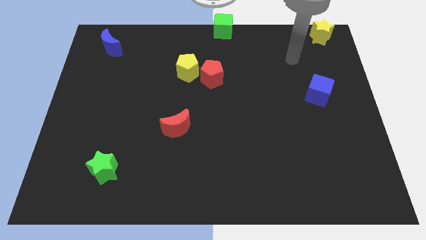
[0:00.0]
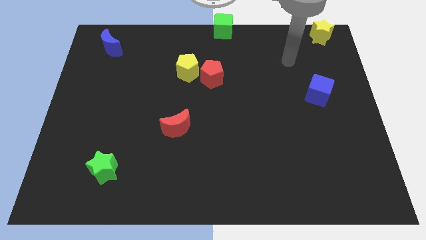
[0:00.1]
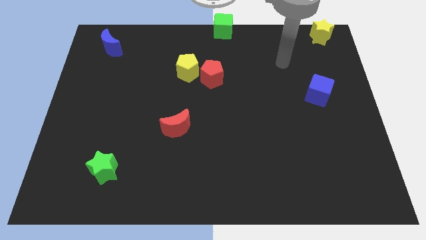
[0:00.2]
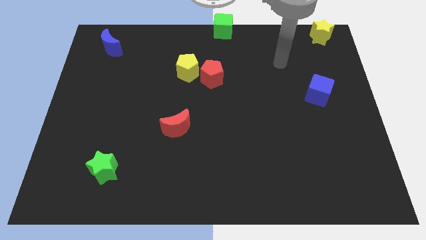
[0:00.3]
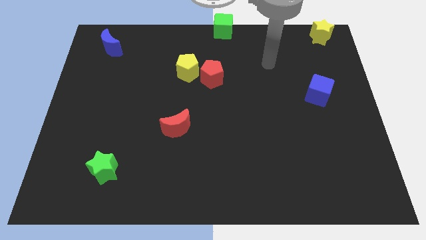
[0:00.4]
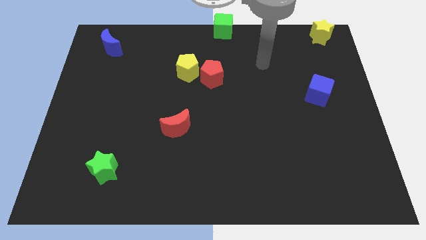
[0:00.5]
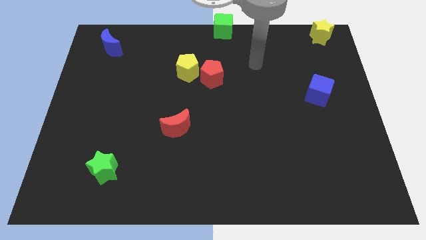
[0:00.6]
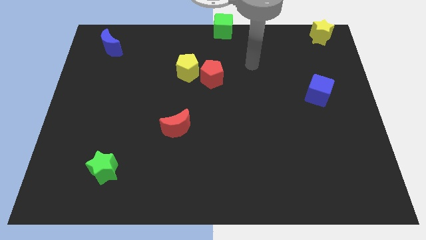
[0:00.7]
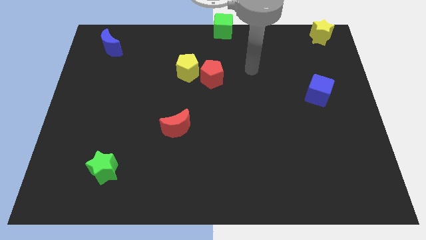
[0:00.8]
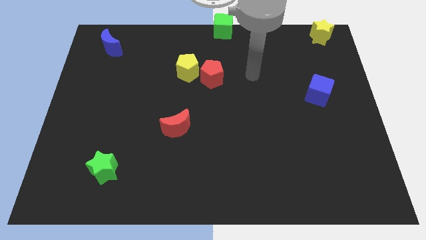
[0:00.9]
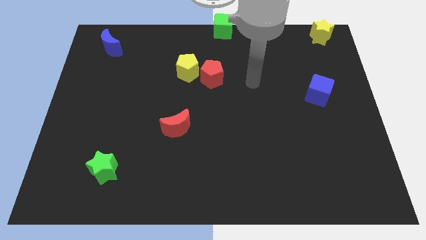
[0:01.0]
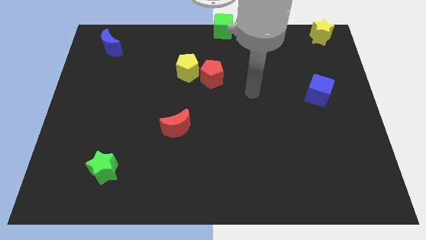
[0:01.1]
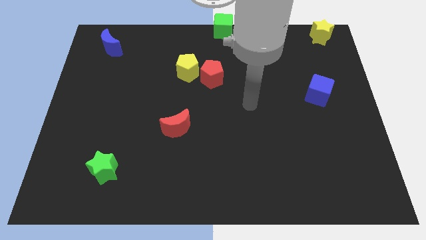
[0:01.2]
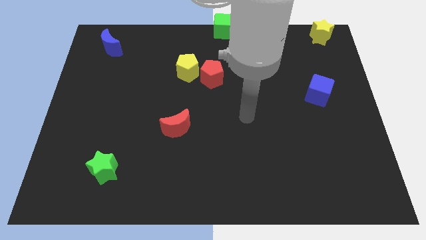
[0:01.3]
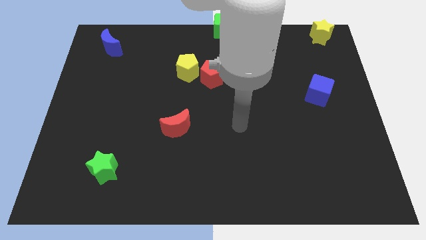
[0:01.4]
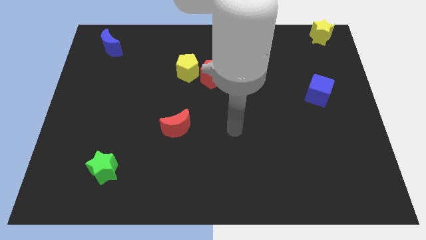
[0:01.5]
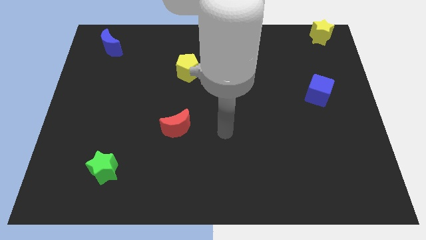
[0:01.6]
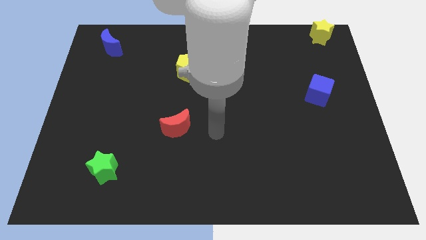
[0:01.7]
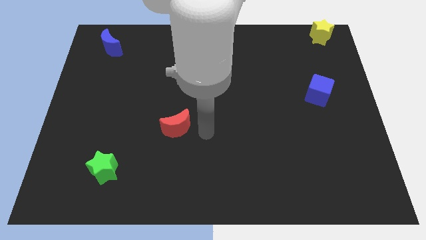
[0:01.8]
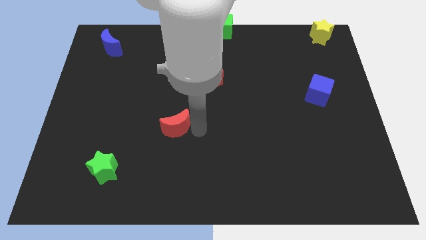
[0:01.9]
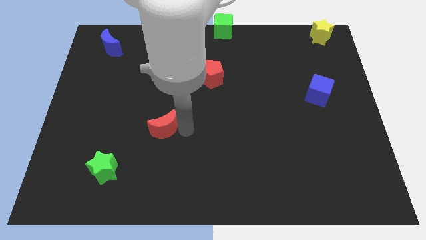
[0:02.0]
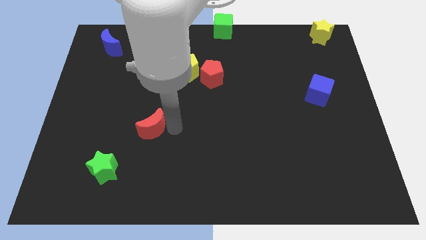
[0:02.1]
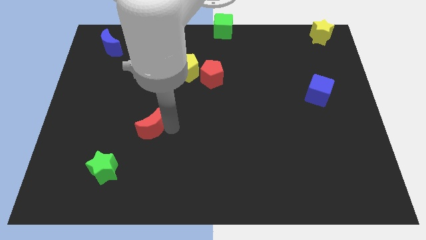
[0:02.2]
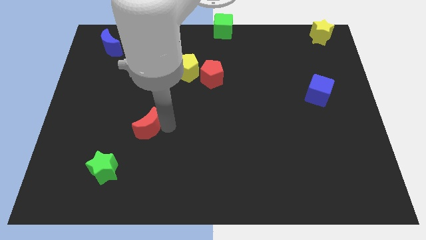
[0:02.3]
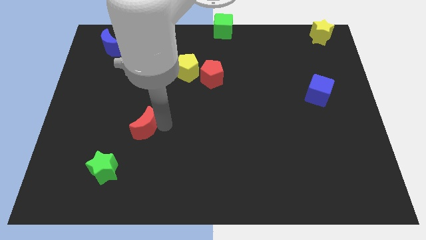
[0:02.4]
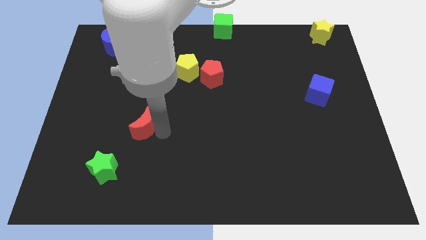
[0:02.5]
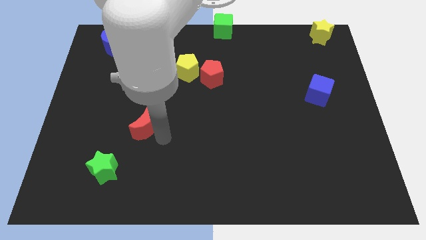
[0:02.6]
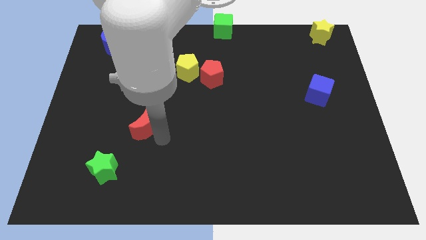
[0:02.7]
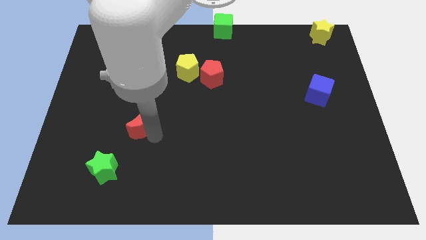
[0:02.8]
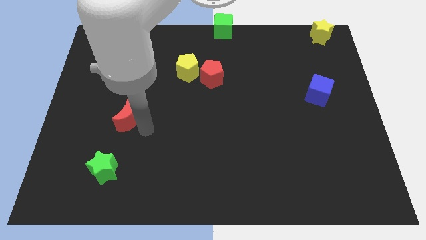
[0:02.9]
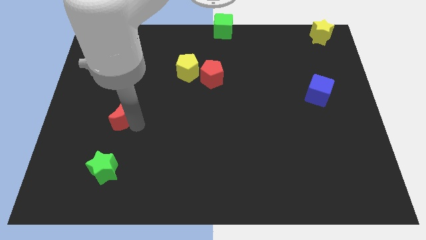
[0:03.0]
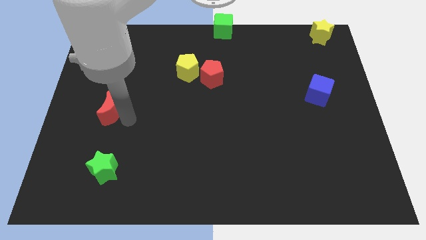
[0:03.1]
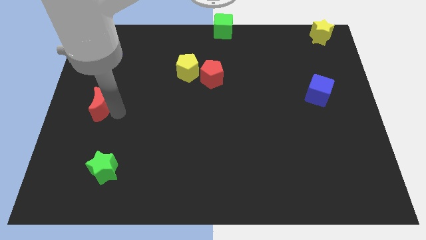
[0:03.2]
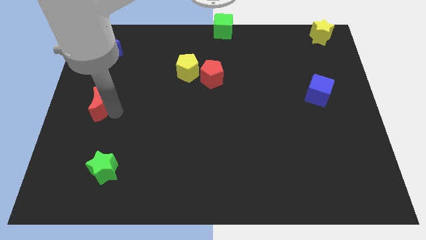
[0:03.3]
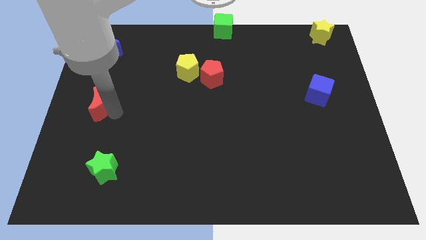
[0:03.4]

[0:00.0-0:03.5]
place the red moon between the green star and blue moon

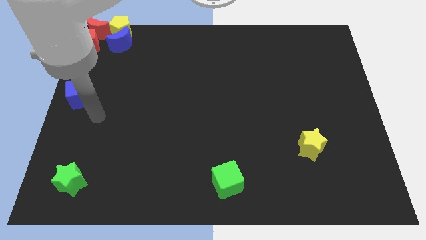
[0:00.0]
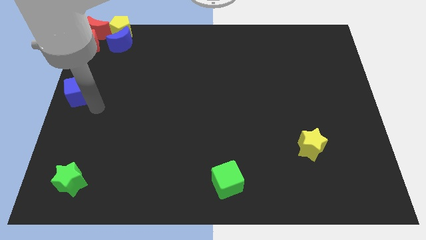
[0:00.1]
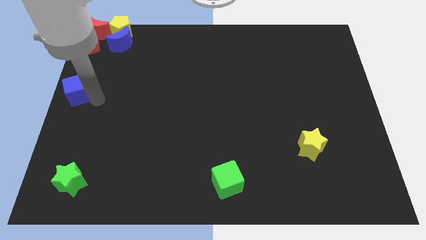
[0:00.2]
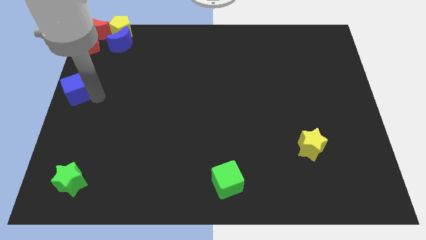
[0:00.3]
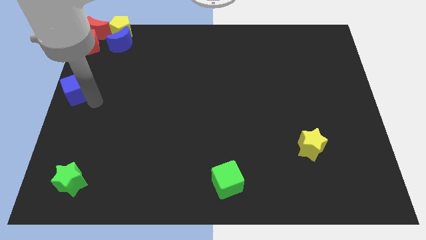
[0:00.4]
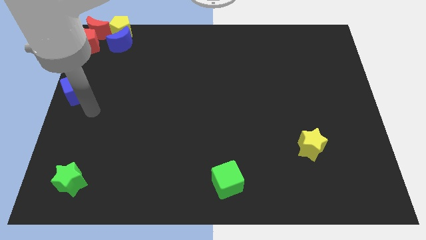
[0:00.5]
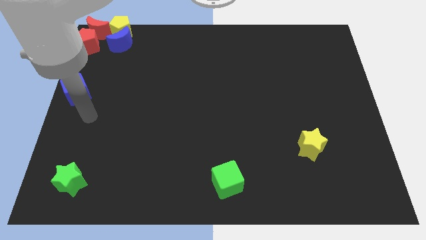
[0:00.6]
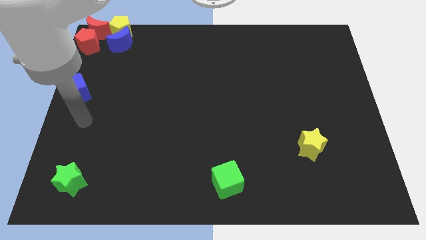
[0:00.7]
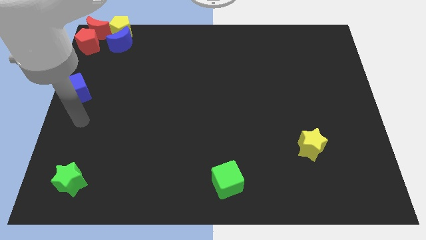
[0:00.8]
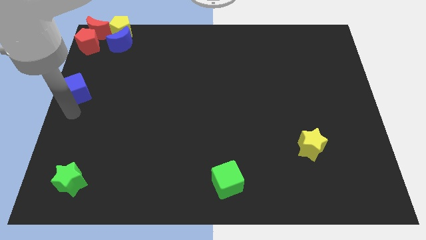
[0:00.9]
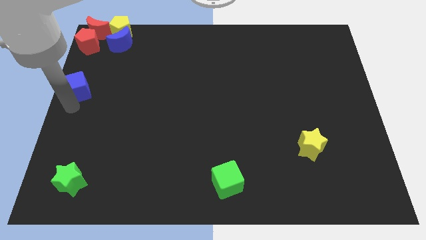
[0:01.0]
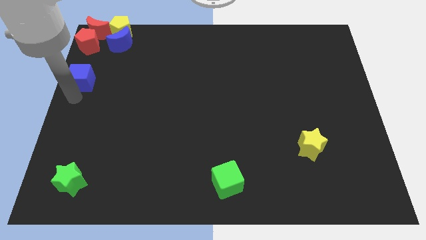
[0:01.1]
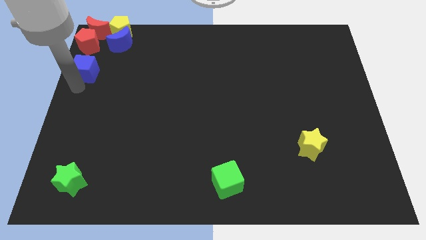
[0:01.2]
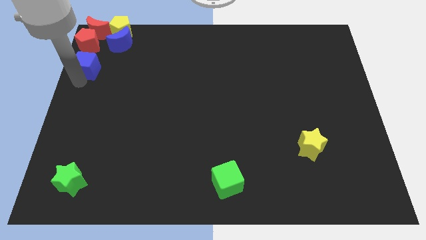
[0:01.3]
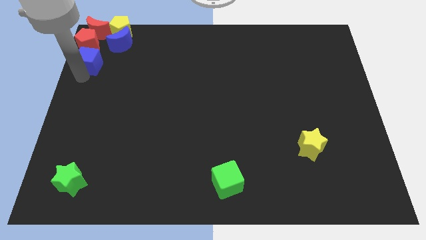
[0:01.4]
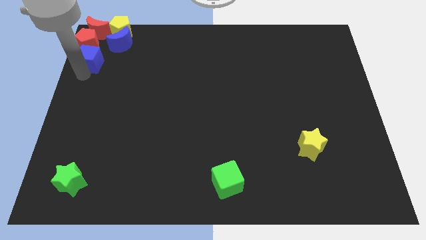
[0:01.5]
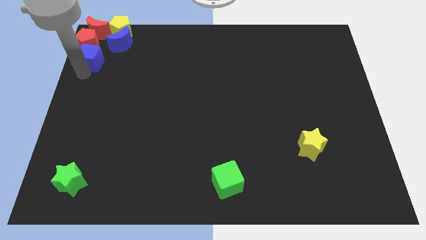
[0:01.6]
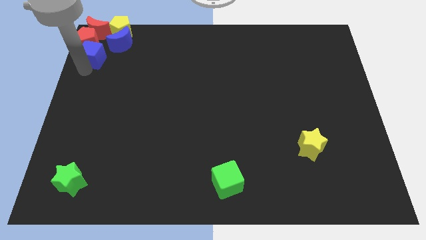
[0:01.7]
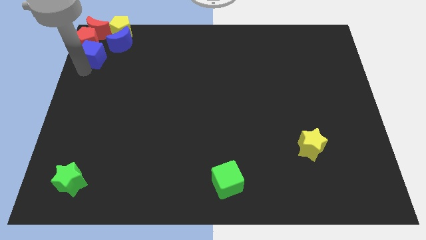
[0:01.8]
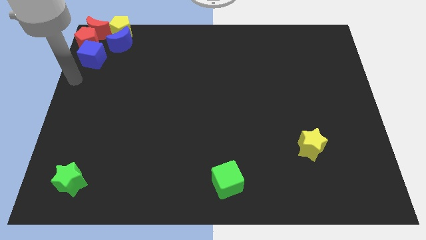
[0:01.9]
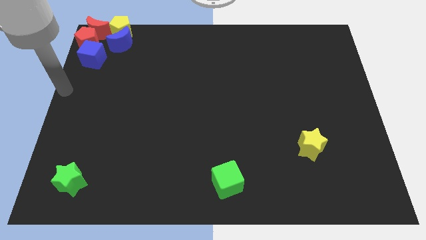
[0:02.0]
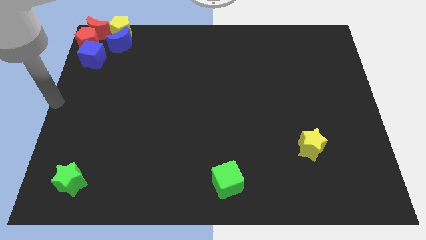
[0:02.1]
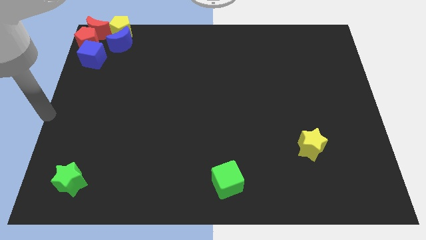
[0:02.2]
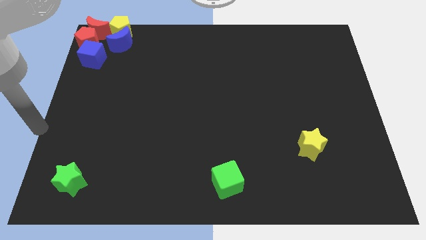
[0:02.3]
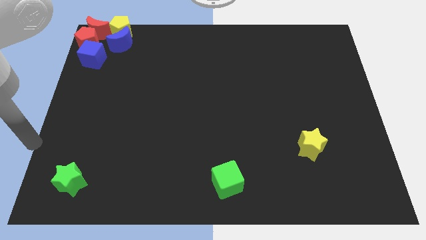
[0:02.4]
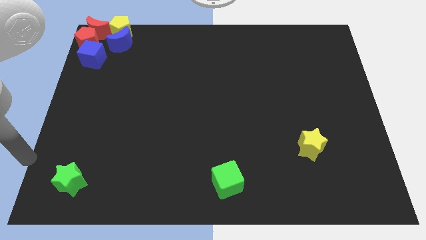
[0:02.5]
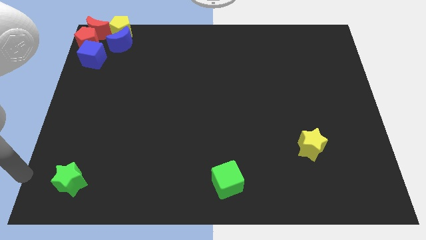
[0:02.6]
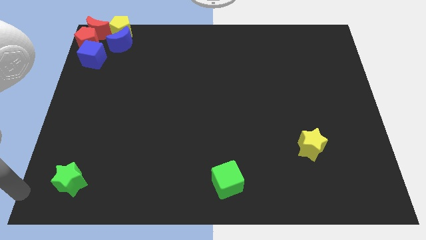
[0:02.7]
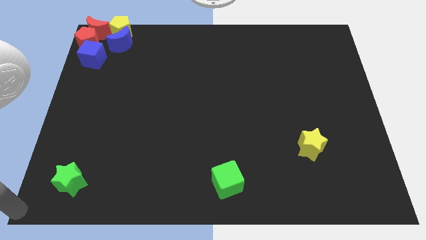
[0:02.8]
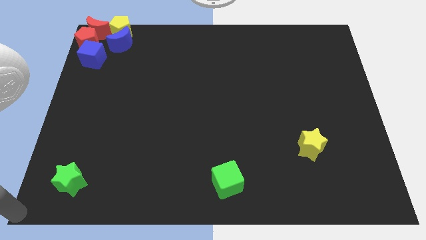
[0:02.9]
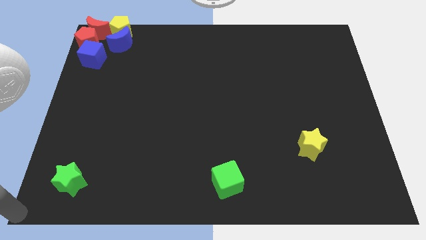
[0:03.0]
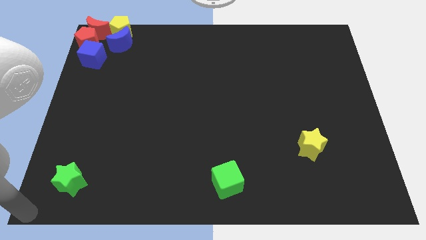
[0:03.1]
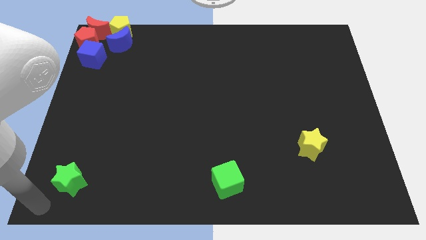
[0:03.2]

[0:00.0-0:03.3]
slide the blue cube to the bottom right side of the red pentagon

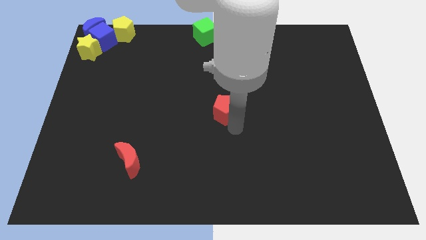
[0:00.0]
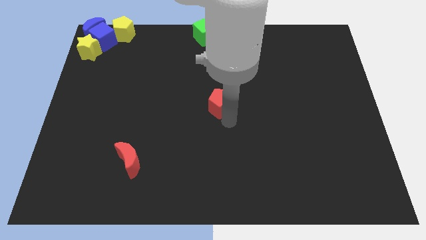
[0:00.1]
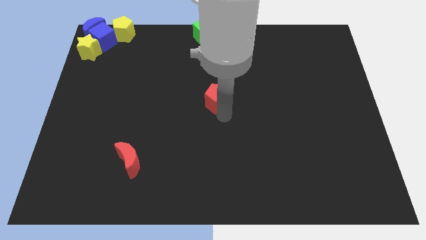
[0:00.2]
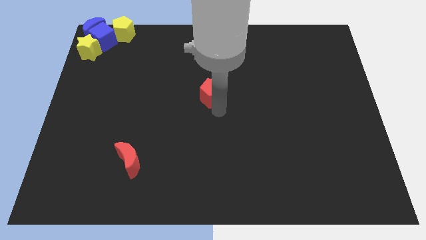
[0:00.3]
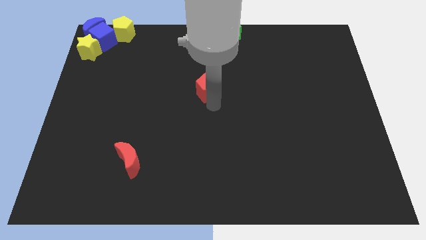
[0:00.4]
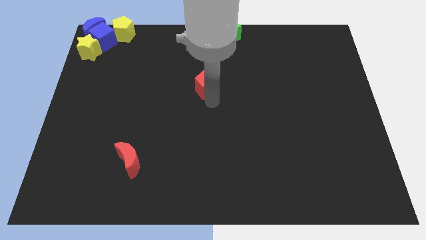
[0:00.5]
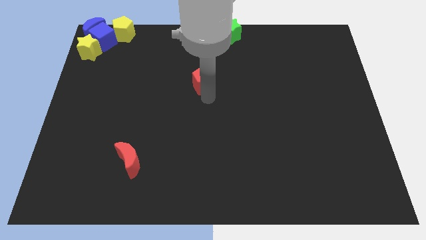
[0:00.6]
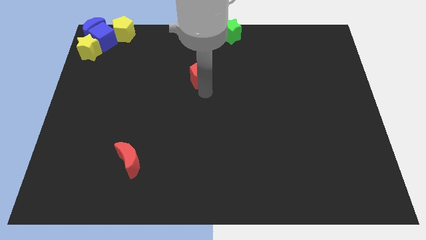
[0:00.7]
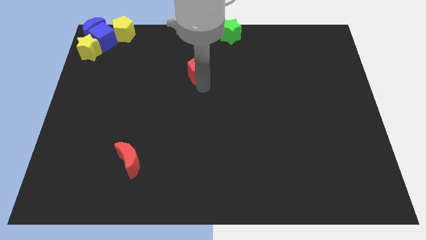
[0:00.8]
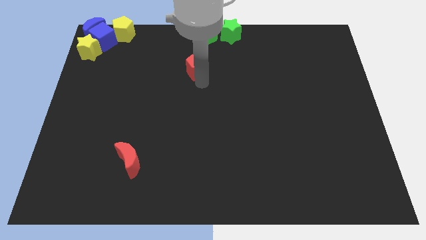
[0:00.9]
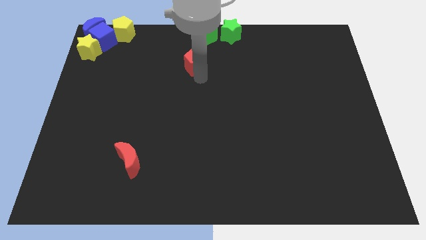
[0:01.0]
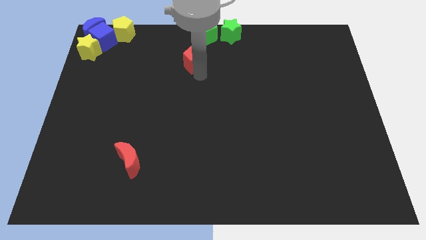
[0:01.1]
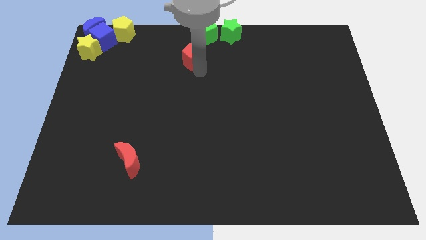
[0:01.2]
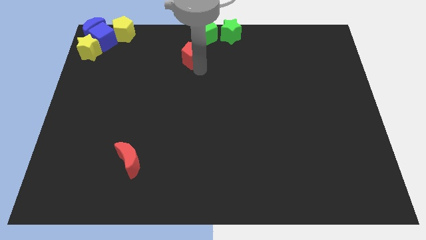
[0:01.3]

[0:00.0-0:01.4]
place the red pentagon diagonally bottom left to the green cube

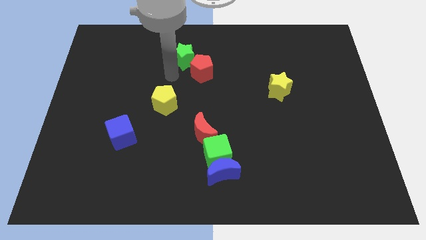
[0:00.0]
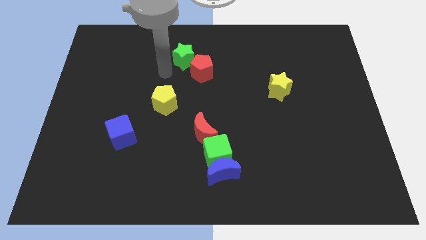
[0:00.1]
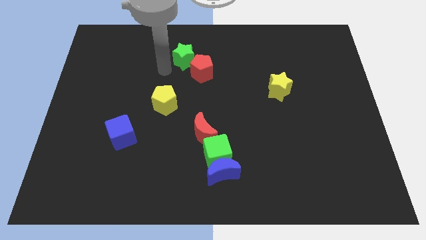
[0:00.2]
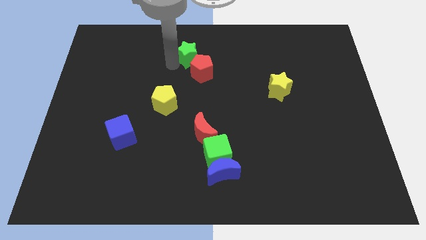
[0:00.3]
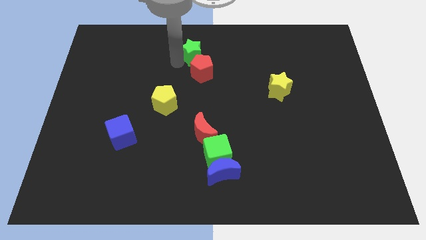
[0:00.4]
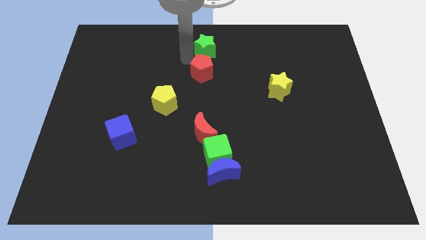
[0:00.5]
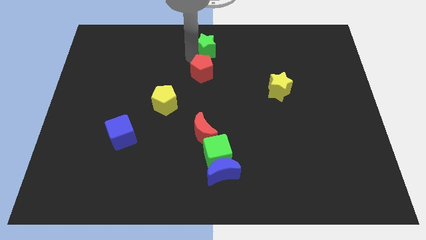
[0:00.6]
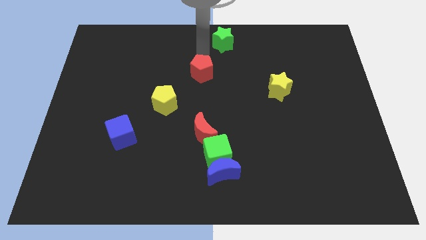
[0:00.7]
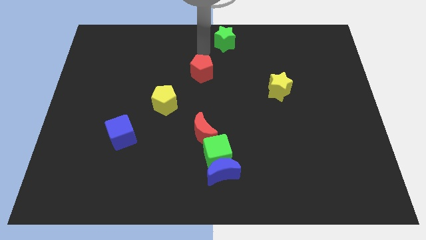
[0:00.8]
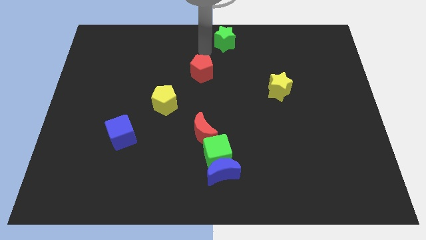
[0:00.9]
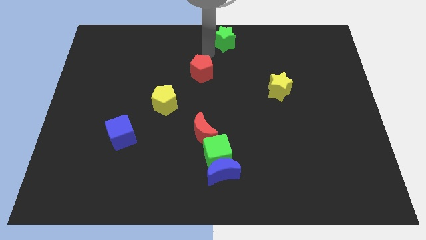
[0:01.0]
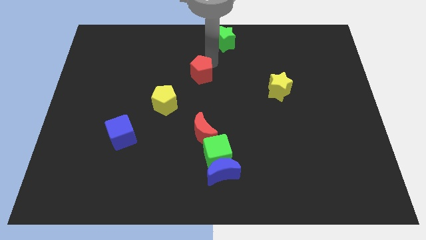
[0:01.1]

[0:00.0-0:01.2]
push the green star away from the red pentagon
